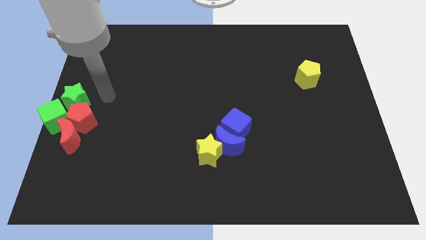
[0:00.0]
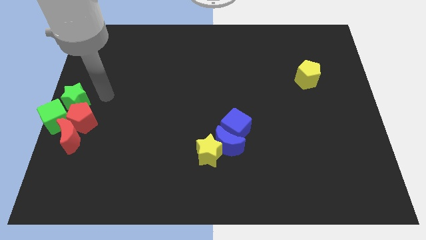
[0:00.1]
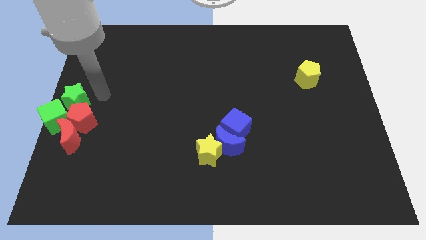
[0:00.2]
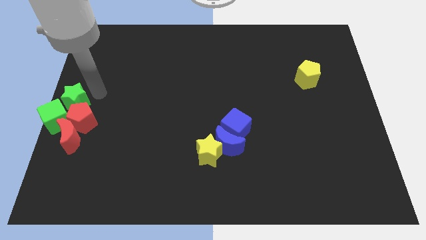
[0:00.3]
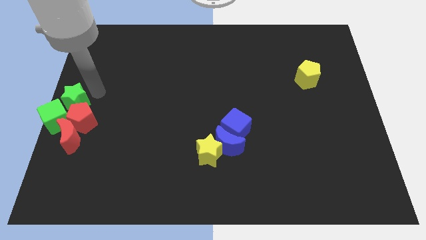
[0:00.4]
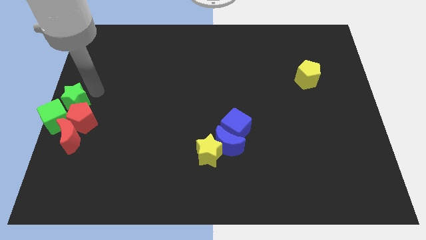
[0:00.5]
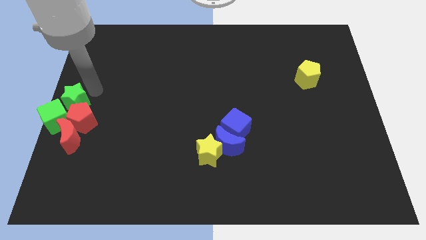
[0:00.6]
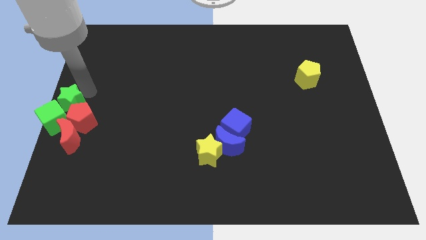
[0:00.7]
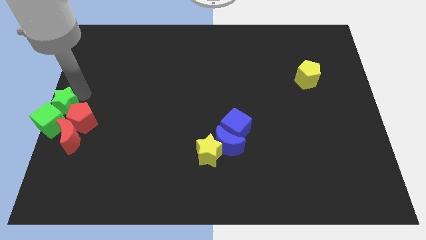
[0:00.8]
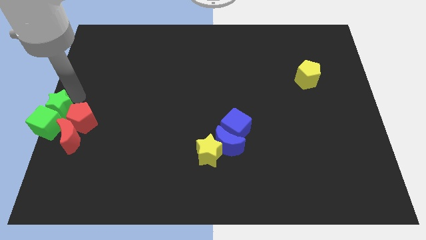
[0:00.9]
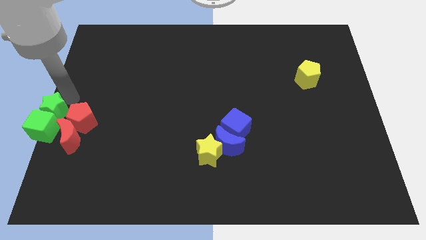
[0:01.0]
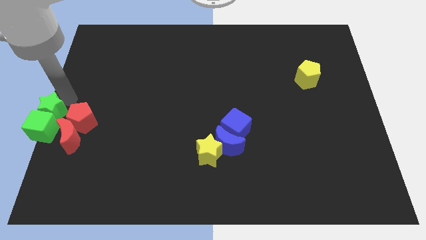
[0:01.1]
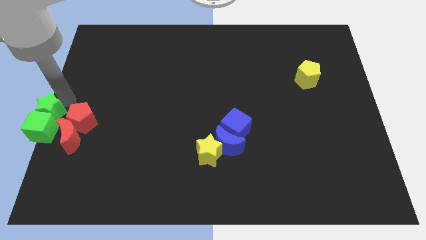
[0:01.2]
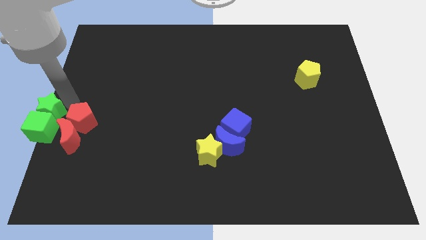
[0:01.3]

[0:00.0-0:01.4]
push green star along with green cube to the down

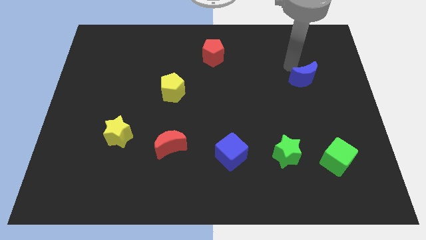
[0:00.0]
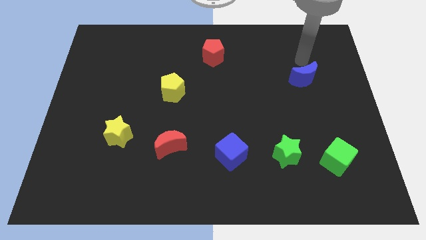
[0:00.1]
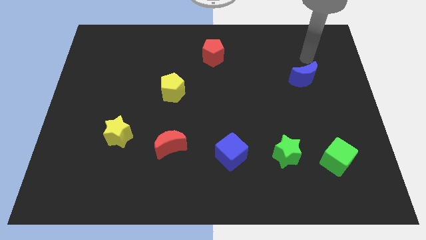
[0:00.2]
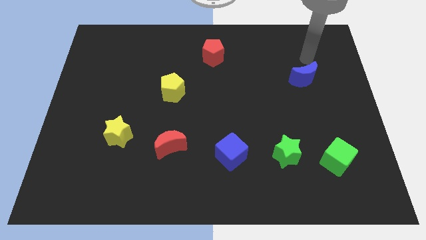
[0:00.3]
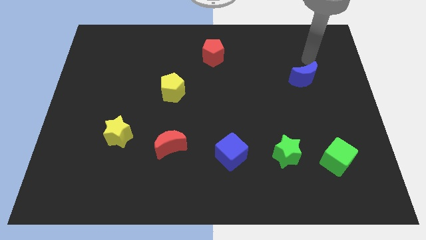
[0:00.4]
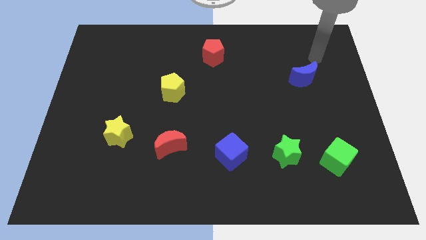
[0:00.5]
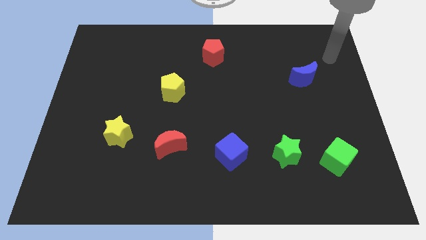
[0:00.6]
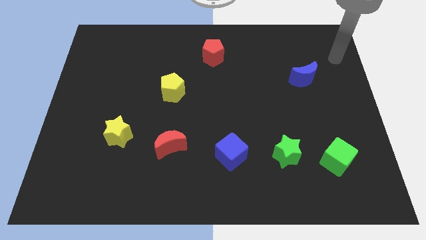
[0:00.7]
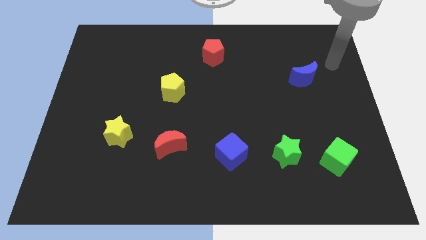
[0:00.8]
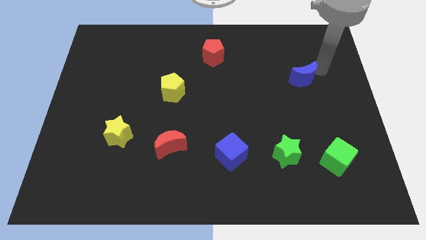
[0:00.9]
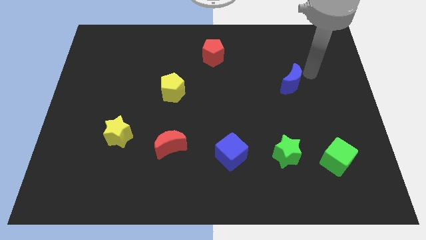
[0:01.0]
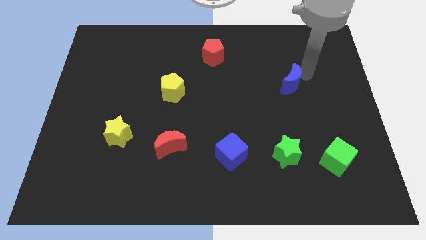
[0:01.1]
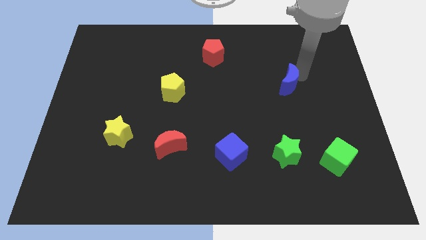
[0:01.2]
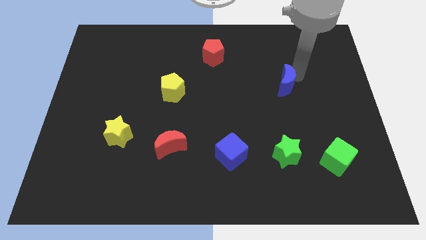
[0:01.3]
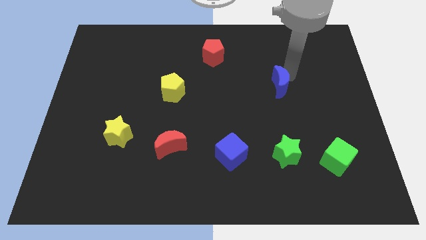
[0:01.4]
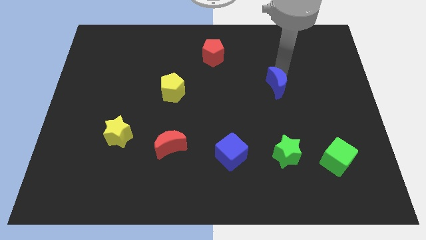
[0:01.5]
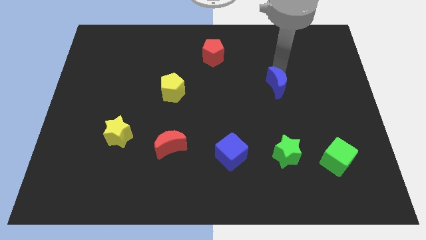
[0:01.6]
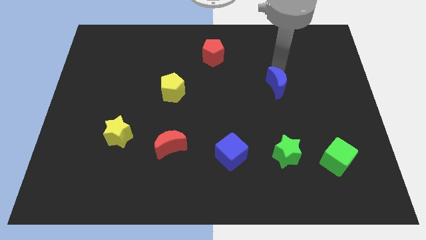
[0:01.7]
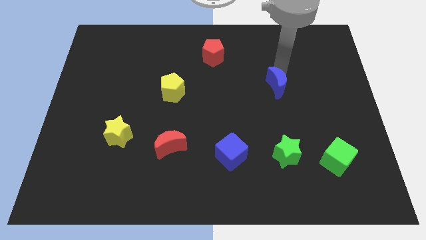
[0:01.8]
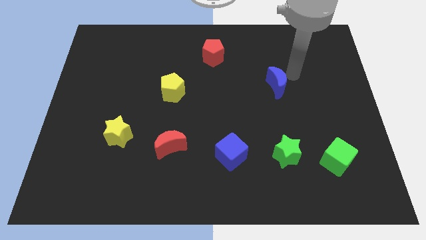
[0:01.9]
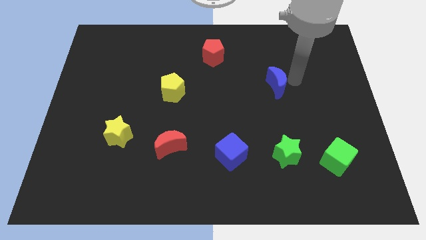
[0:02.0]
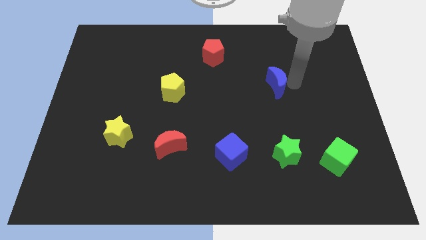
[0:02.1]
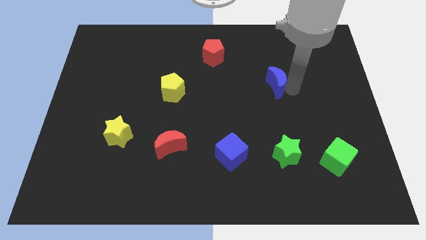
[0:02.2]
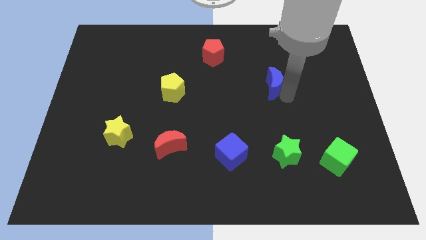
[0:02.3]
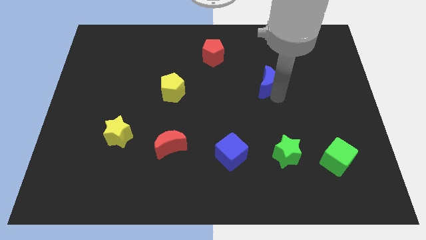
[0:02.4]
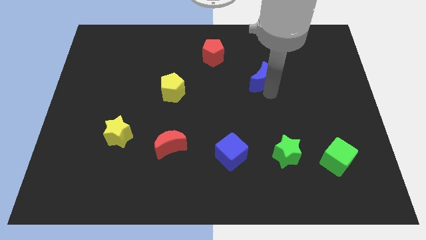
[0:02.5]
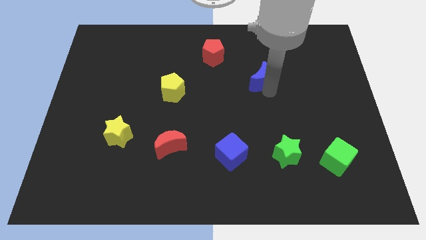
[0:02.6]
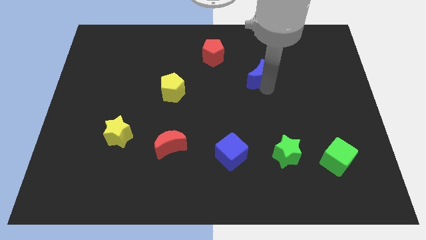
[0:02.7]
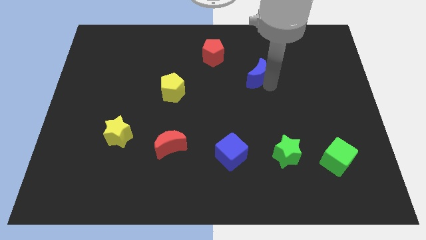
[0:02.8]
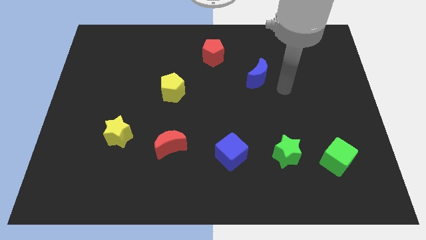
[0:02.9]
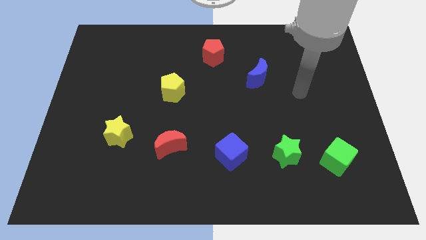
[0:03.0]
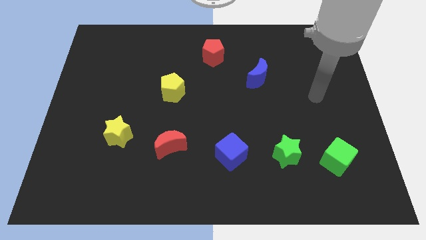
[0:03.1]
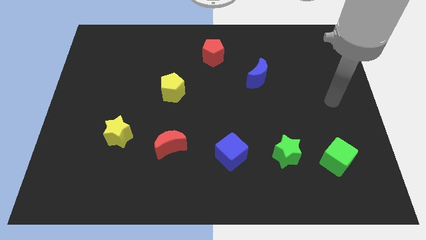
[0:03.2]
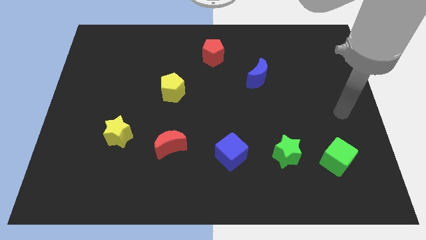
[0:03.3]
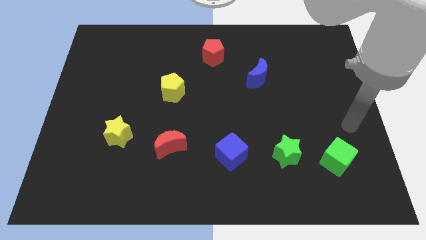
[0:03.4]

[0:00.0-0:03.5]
push the blue moon towards the center of the board

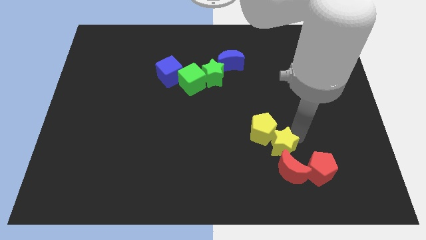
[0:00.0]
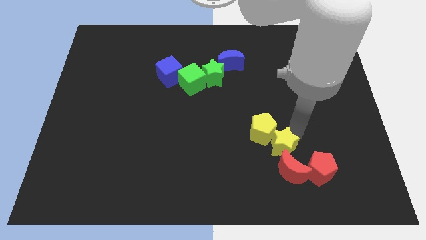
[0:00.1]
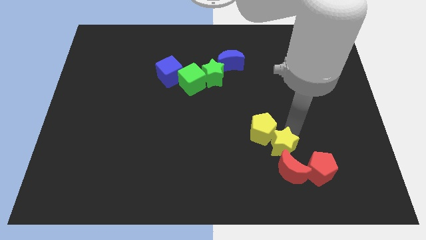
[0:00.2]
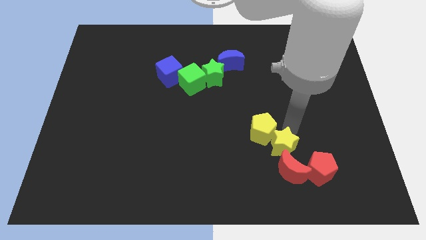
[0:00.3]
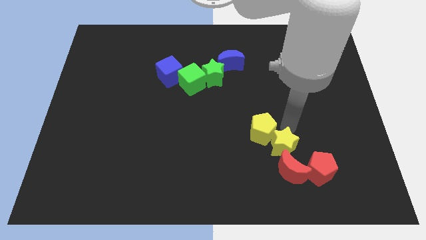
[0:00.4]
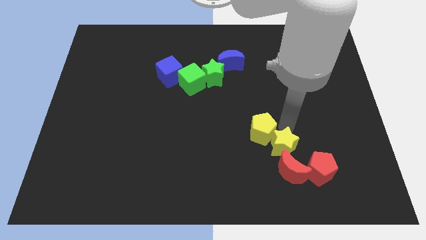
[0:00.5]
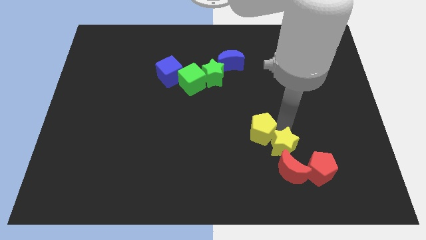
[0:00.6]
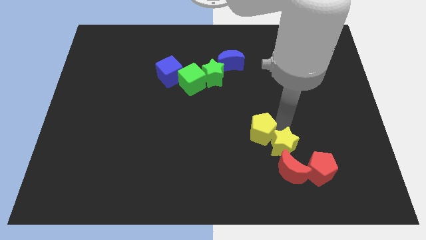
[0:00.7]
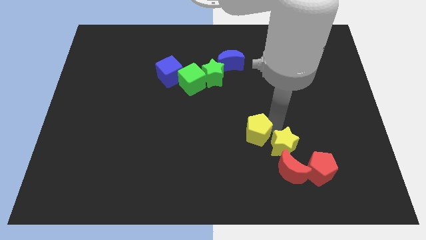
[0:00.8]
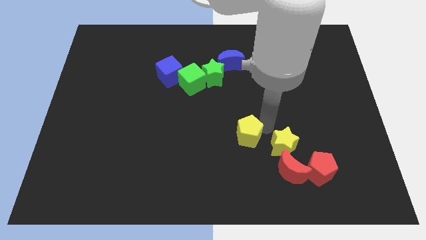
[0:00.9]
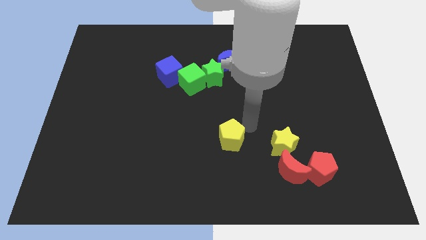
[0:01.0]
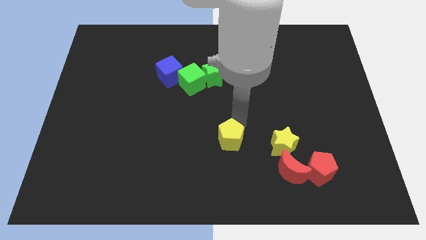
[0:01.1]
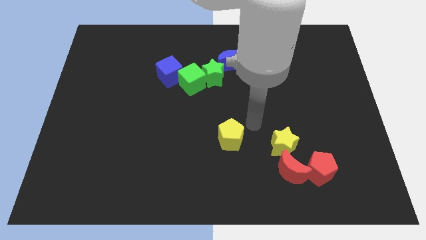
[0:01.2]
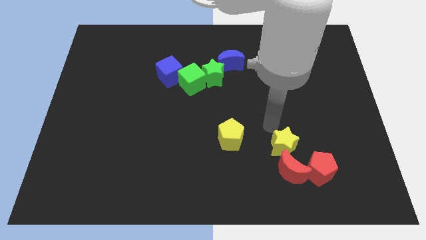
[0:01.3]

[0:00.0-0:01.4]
separate the yellow pentagon from the yellow star

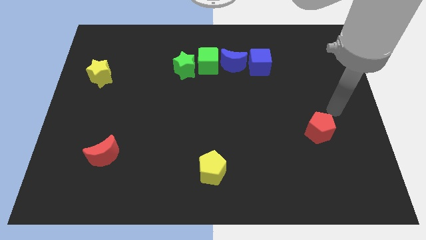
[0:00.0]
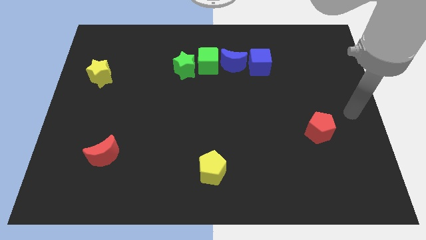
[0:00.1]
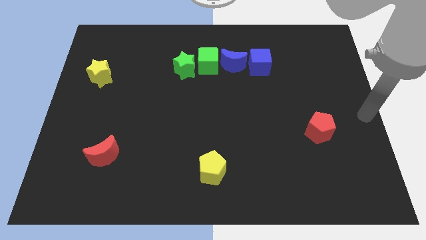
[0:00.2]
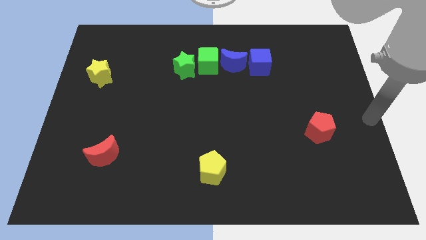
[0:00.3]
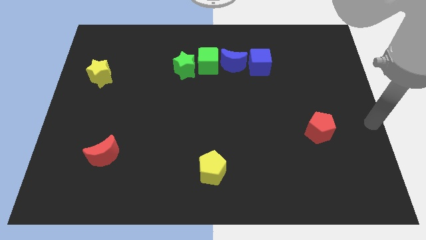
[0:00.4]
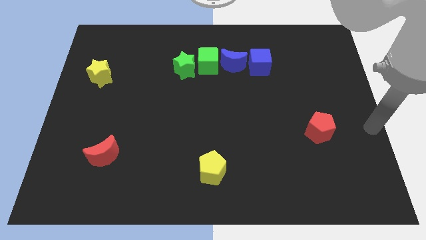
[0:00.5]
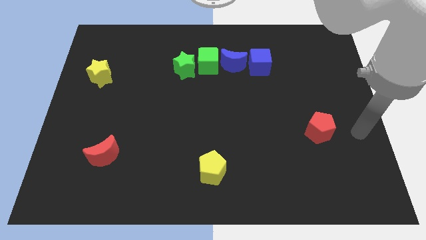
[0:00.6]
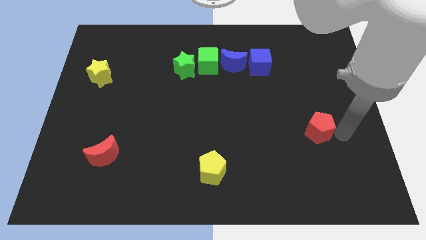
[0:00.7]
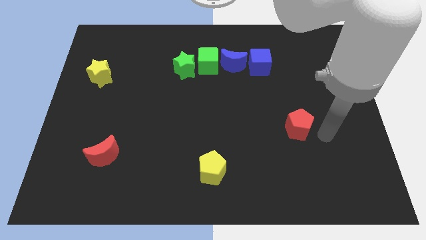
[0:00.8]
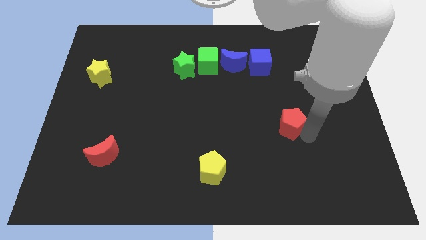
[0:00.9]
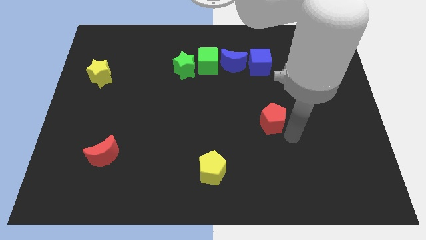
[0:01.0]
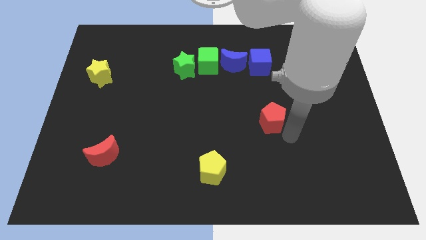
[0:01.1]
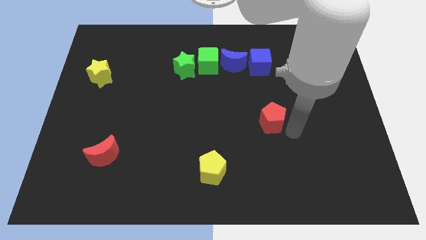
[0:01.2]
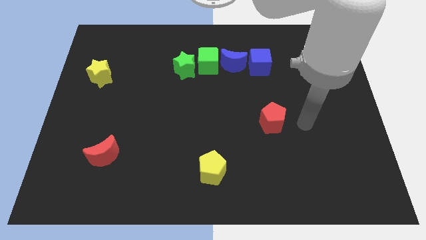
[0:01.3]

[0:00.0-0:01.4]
place the red pentagon vertical to the blue cube

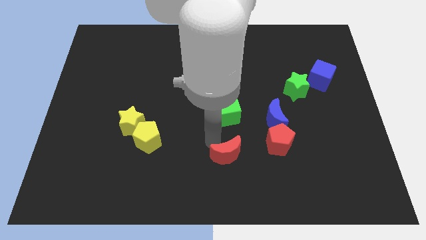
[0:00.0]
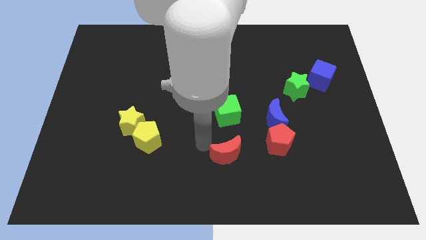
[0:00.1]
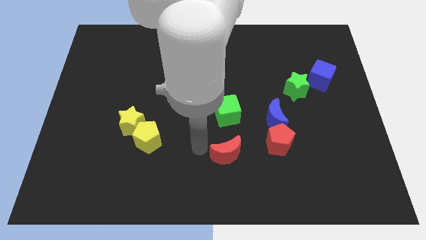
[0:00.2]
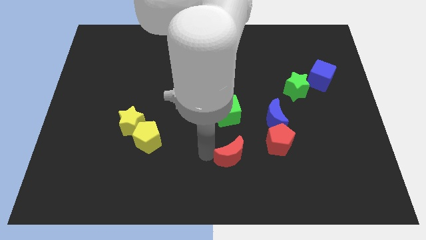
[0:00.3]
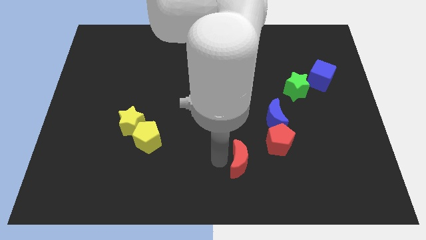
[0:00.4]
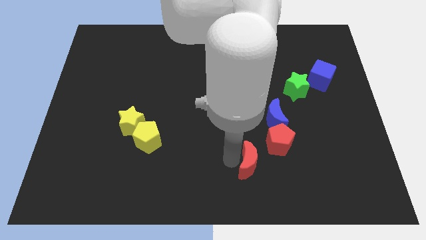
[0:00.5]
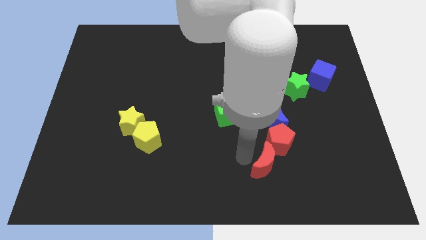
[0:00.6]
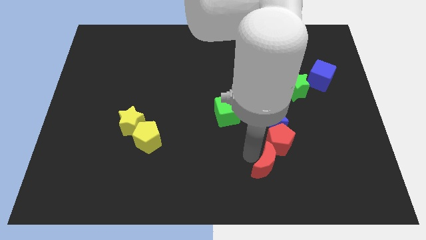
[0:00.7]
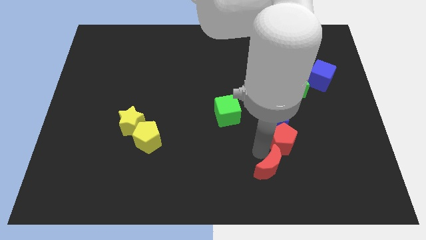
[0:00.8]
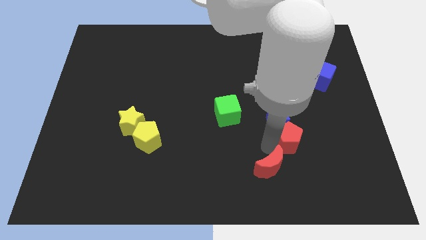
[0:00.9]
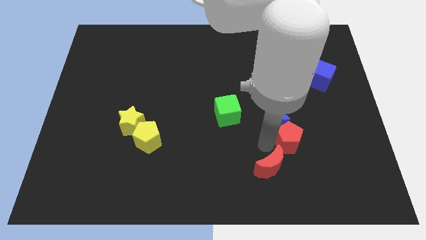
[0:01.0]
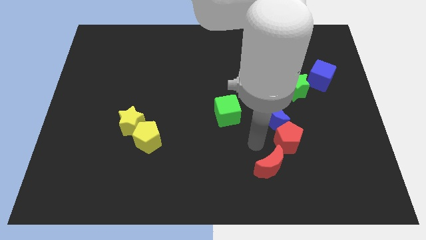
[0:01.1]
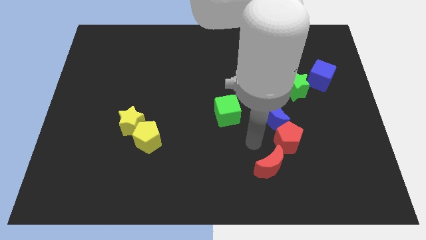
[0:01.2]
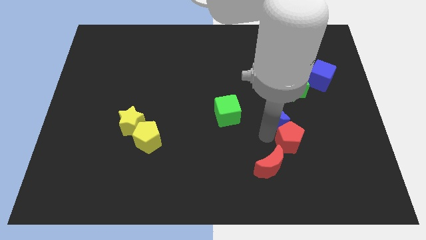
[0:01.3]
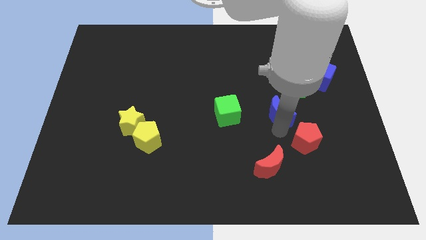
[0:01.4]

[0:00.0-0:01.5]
attach the red moon to the red pentagon
